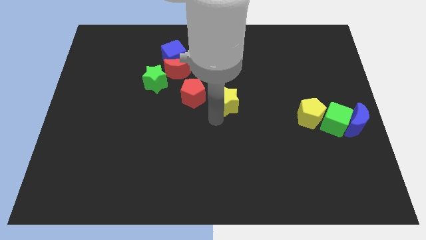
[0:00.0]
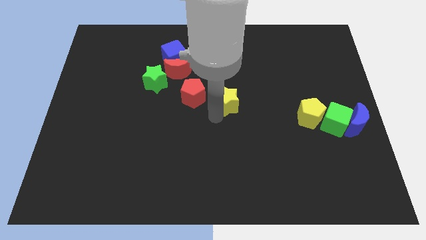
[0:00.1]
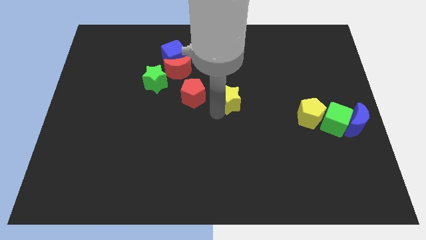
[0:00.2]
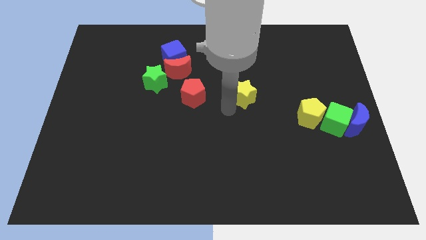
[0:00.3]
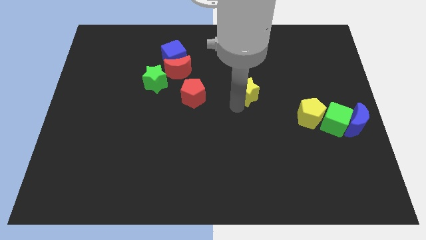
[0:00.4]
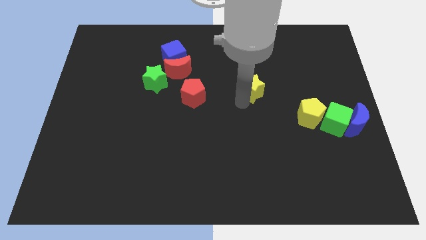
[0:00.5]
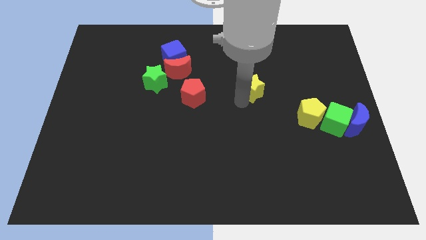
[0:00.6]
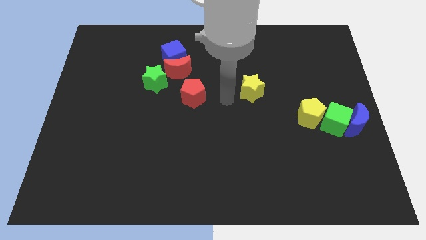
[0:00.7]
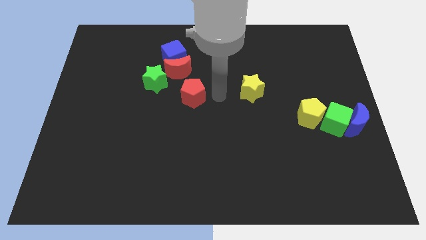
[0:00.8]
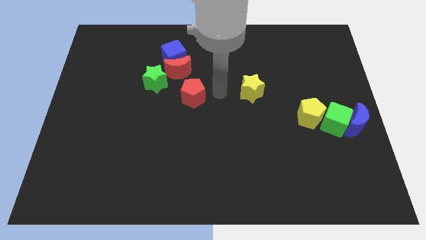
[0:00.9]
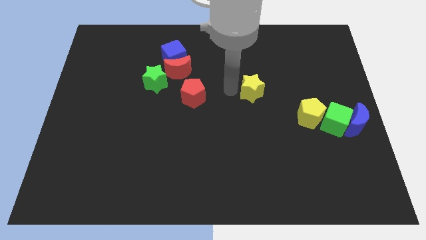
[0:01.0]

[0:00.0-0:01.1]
push the yellow star upward

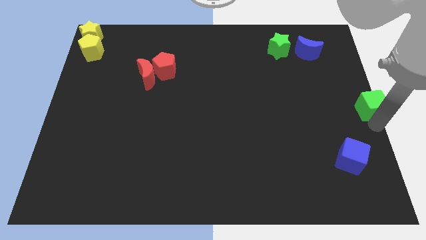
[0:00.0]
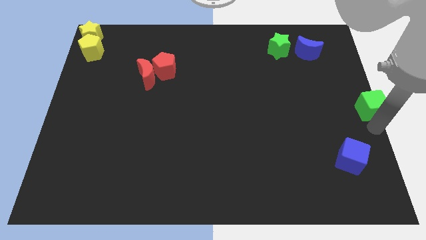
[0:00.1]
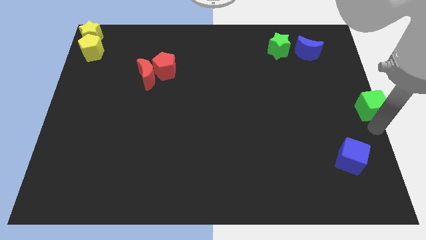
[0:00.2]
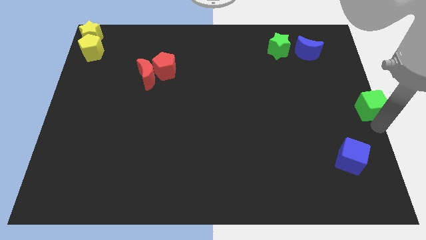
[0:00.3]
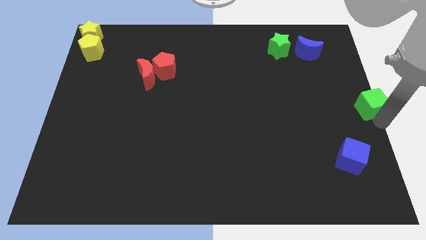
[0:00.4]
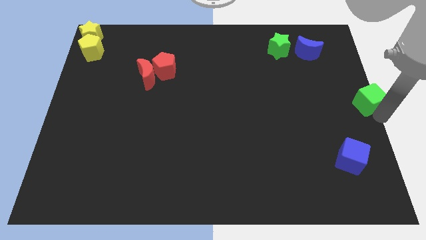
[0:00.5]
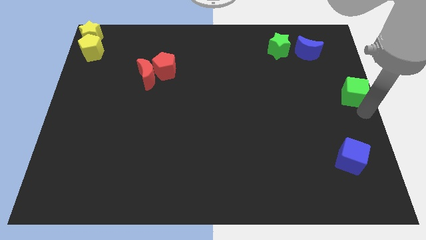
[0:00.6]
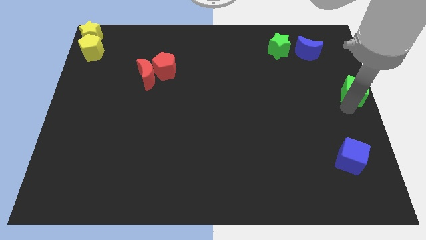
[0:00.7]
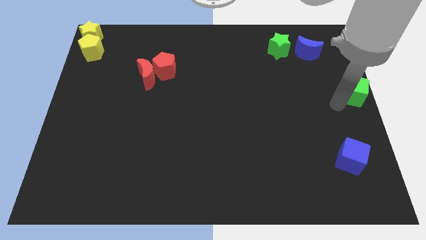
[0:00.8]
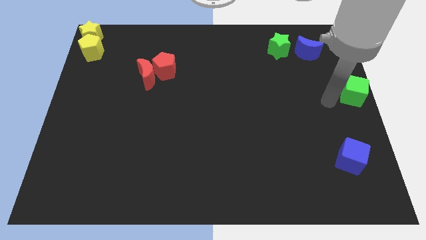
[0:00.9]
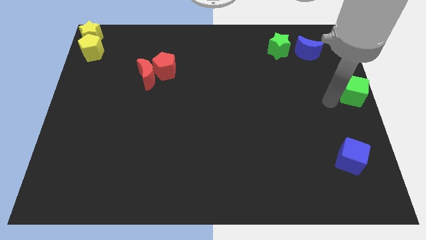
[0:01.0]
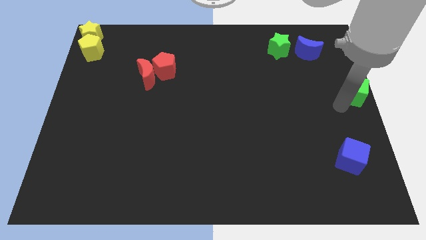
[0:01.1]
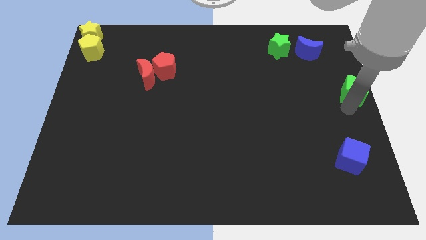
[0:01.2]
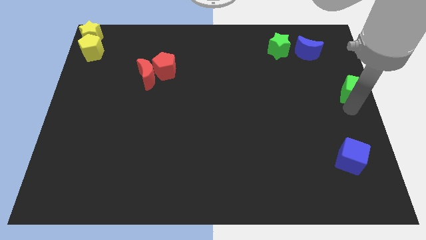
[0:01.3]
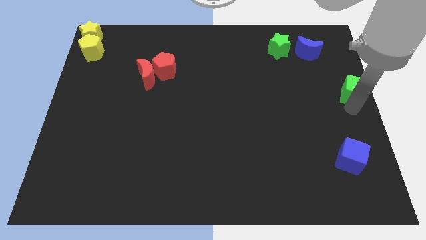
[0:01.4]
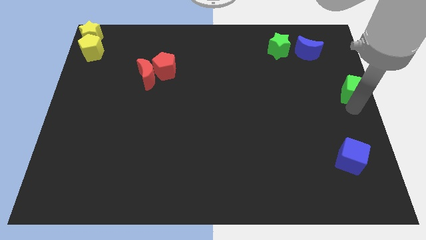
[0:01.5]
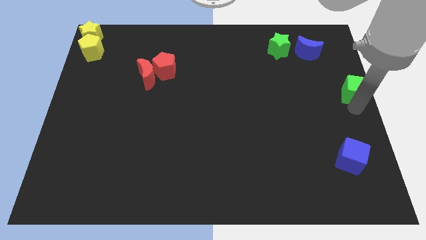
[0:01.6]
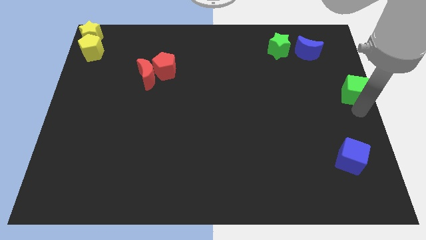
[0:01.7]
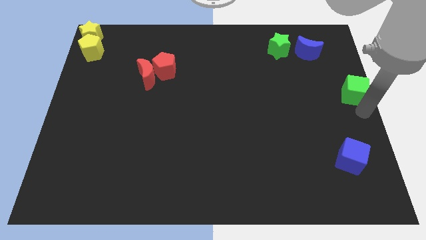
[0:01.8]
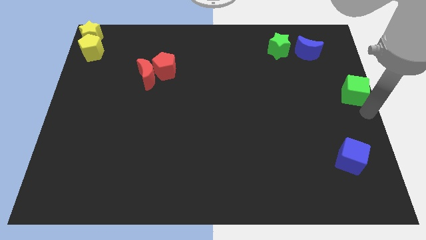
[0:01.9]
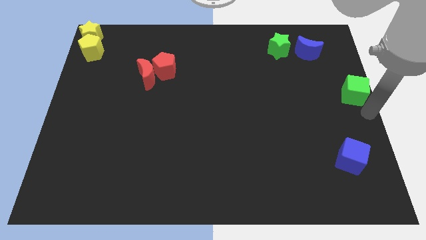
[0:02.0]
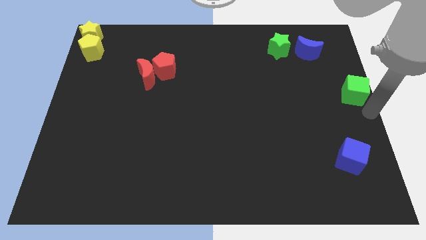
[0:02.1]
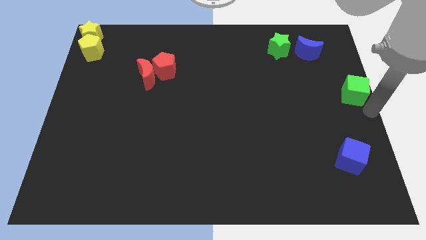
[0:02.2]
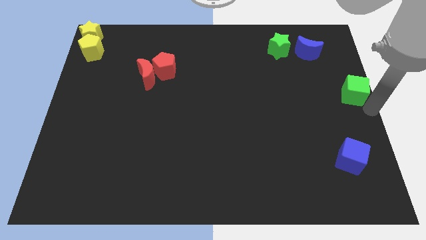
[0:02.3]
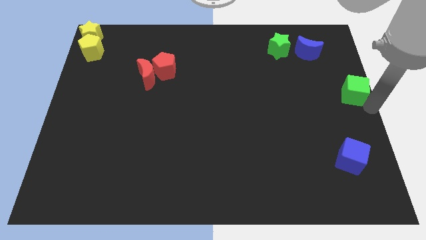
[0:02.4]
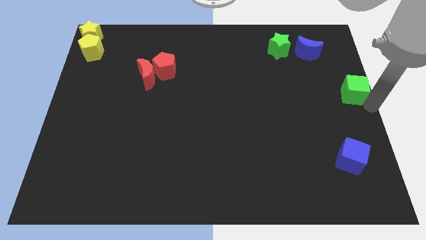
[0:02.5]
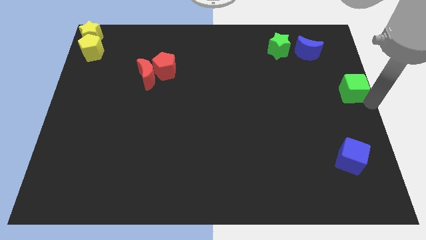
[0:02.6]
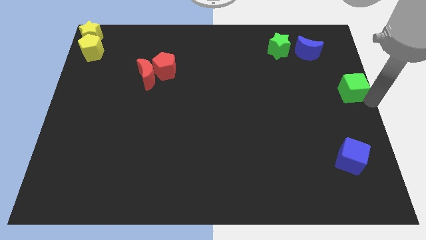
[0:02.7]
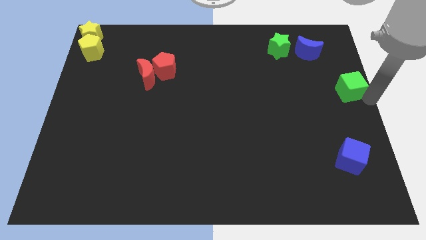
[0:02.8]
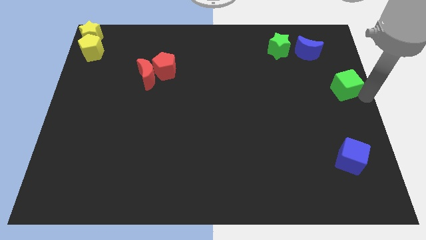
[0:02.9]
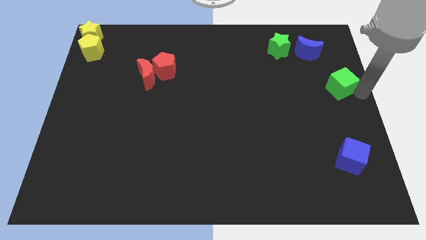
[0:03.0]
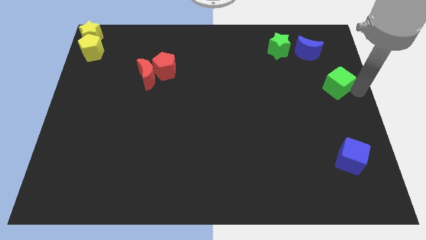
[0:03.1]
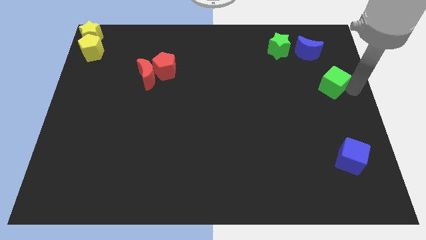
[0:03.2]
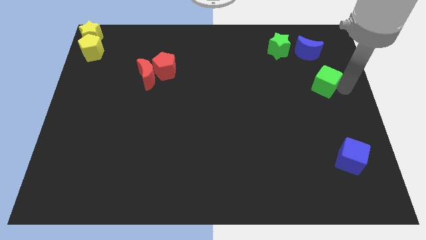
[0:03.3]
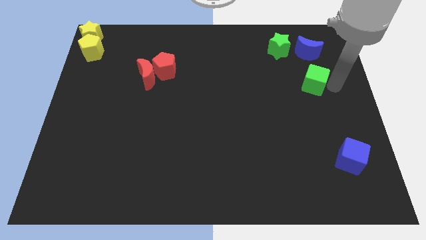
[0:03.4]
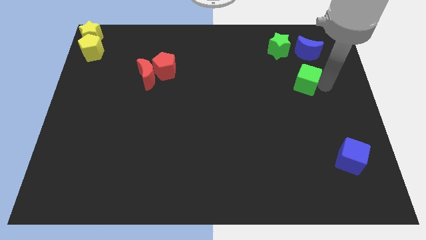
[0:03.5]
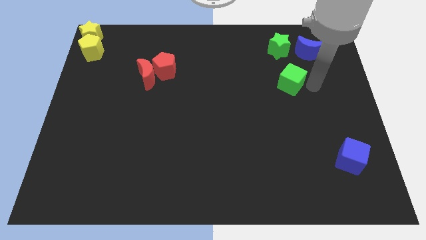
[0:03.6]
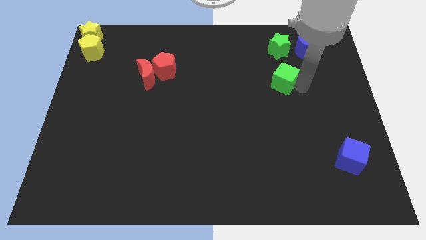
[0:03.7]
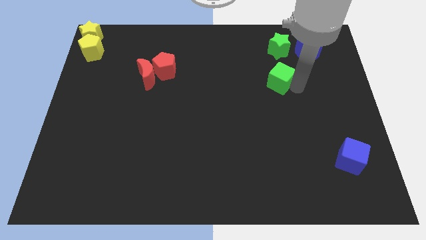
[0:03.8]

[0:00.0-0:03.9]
push the green cube parallel bottom of the green star

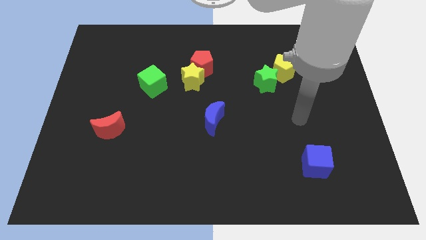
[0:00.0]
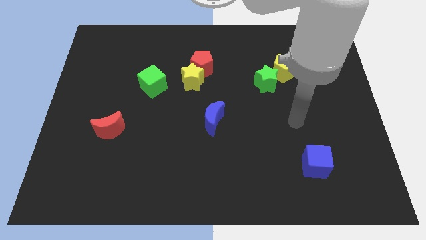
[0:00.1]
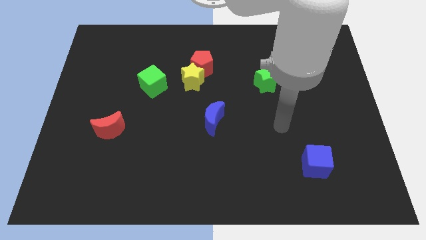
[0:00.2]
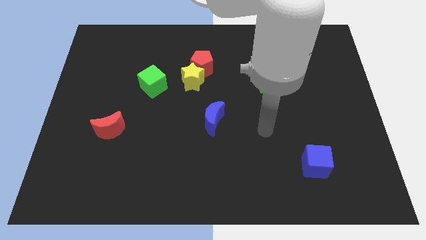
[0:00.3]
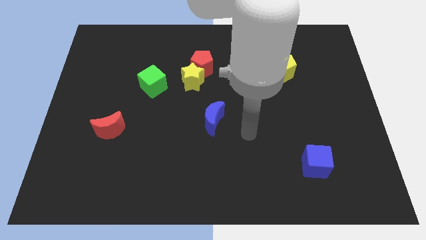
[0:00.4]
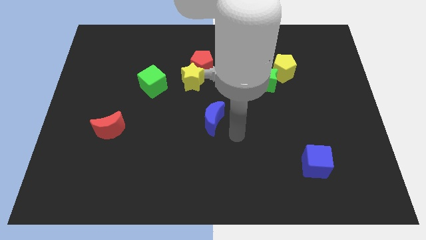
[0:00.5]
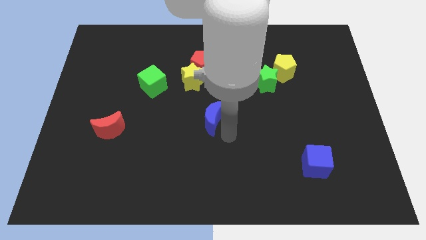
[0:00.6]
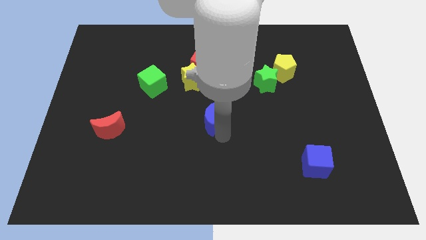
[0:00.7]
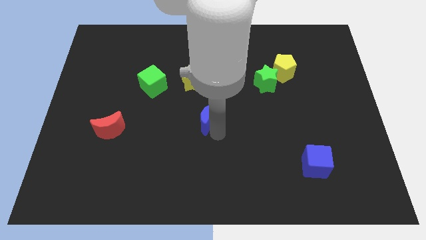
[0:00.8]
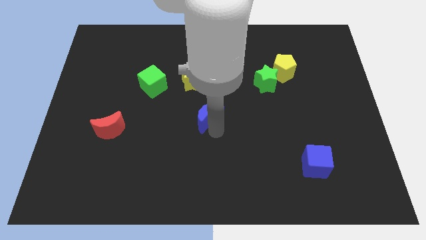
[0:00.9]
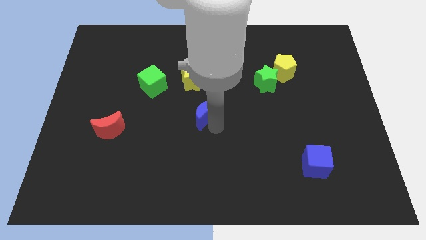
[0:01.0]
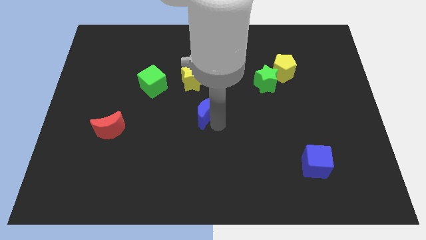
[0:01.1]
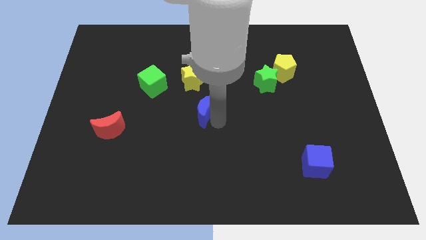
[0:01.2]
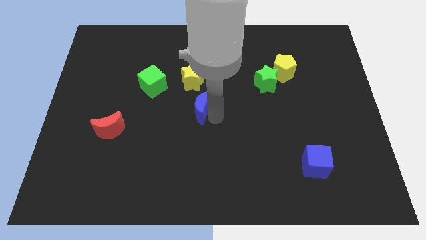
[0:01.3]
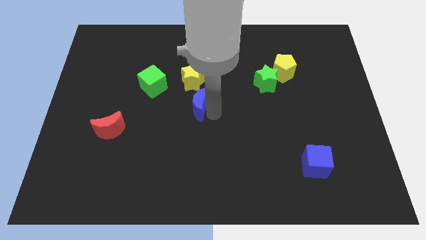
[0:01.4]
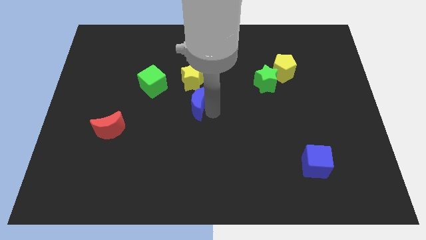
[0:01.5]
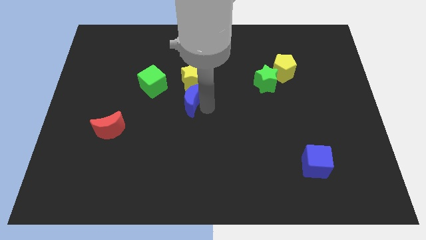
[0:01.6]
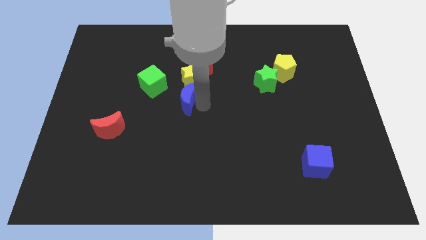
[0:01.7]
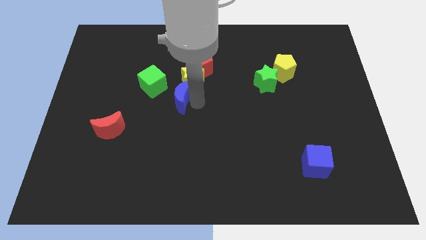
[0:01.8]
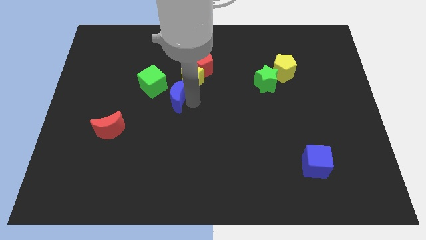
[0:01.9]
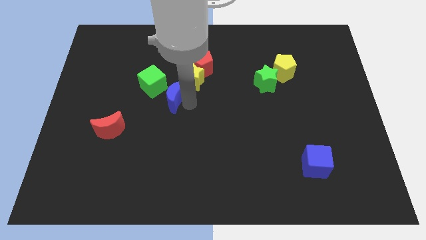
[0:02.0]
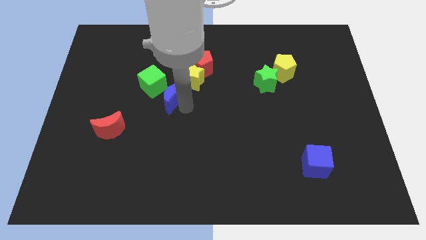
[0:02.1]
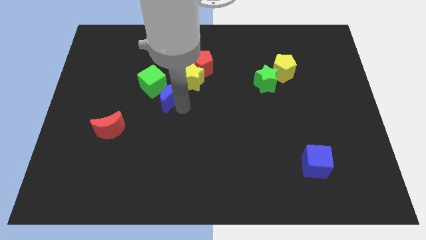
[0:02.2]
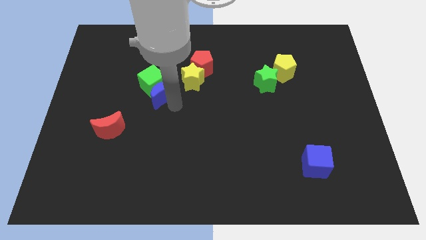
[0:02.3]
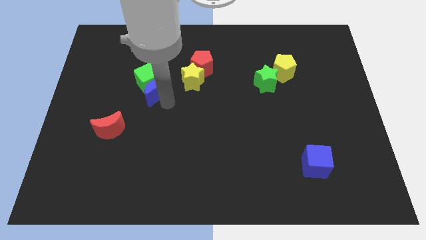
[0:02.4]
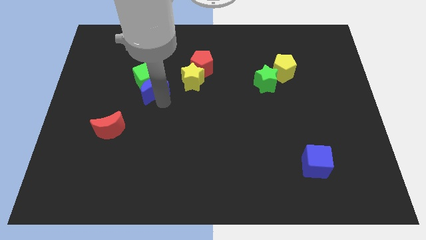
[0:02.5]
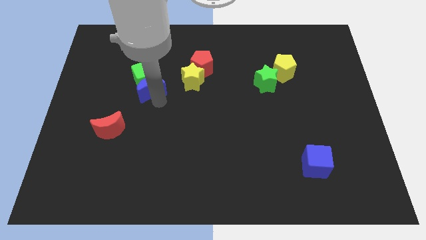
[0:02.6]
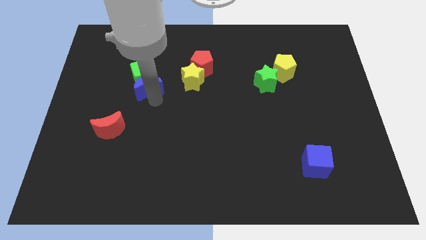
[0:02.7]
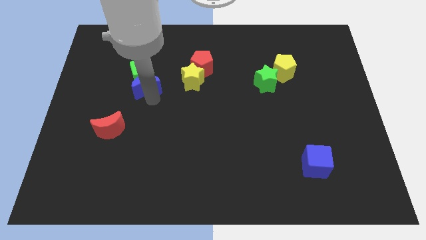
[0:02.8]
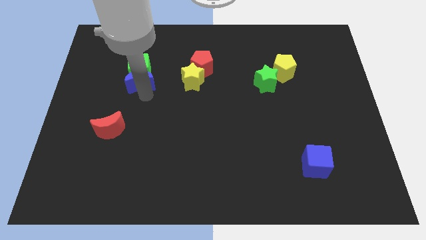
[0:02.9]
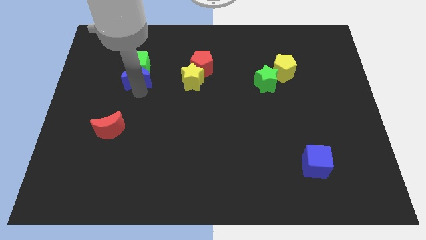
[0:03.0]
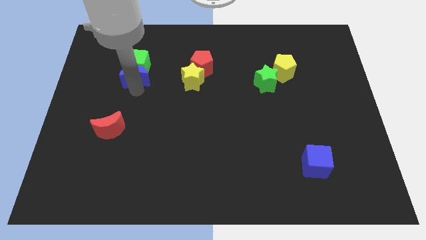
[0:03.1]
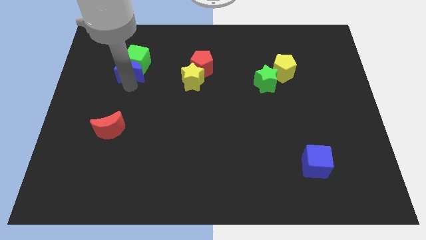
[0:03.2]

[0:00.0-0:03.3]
put the blue moon at the bottom of the green cube

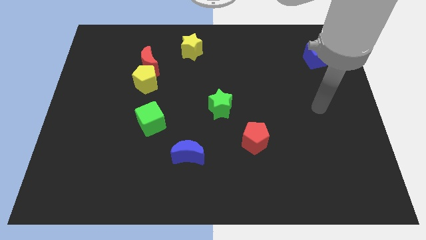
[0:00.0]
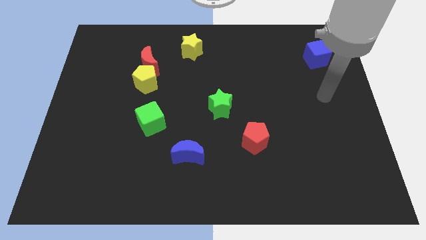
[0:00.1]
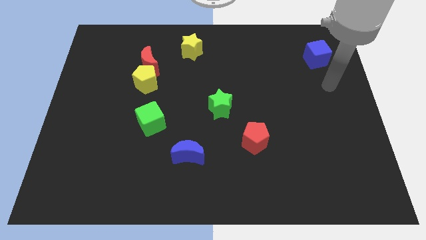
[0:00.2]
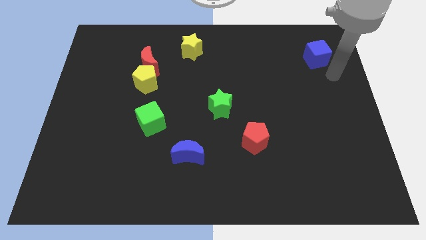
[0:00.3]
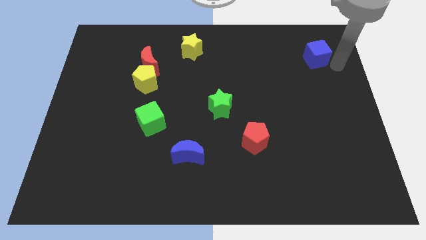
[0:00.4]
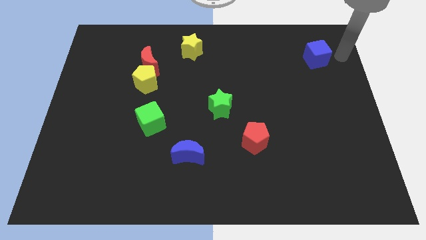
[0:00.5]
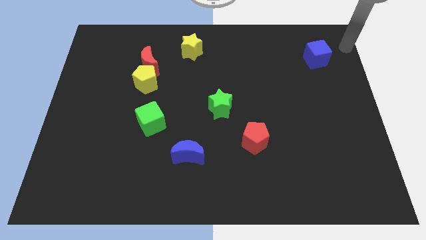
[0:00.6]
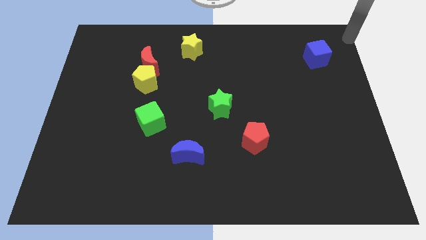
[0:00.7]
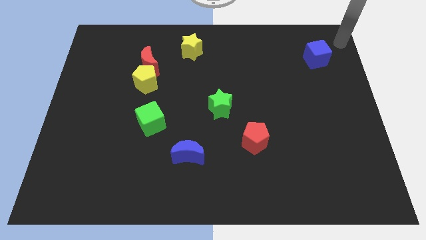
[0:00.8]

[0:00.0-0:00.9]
place the arm to the top right corner of the board
